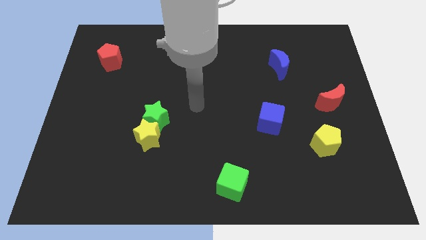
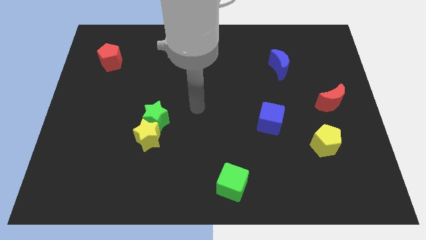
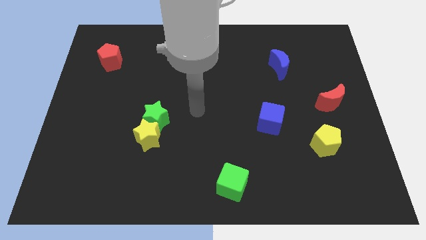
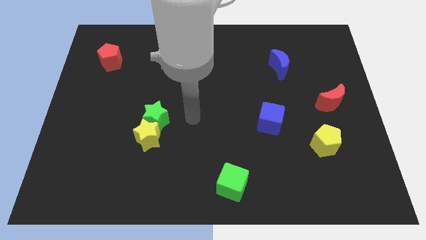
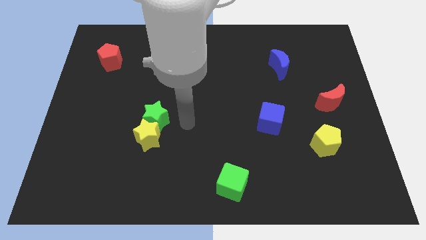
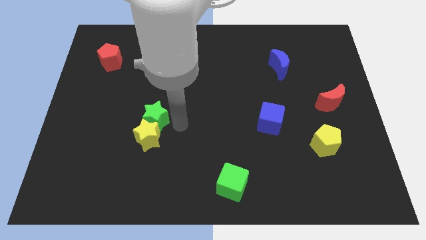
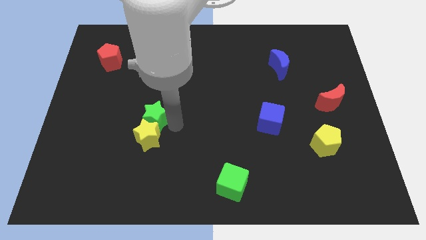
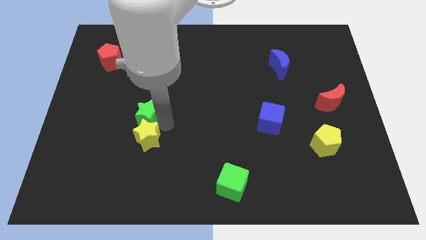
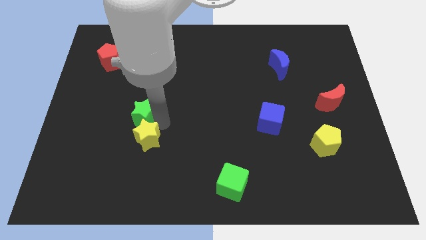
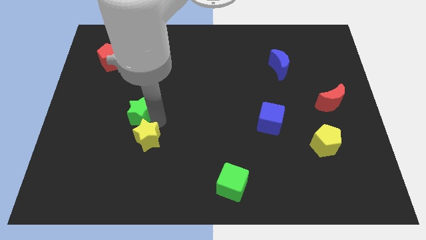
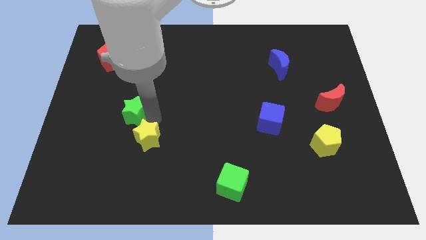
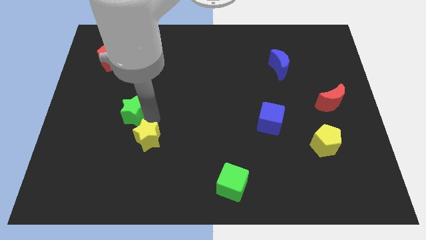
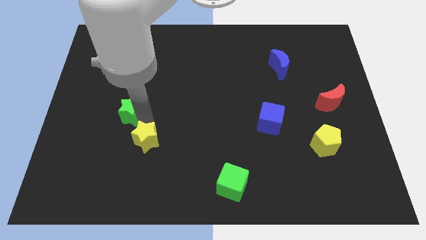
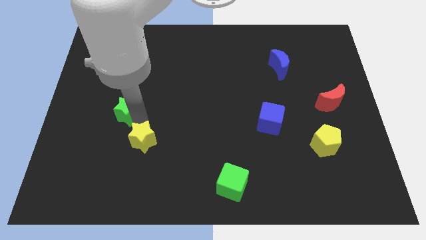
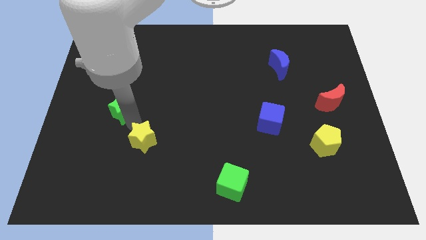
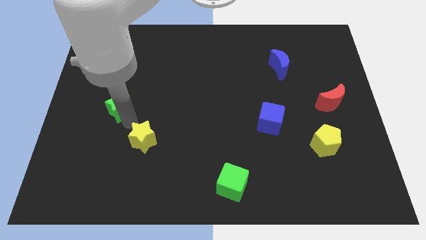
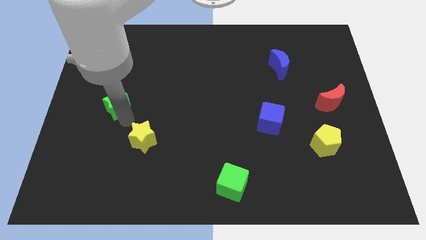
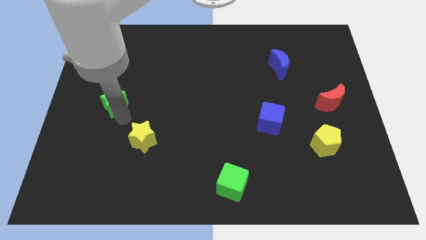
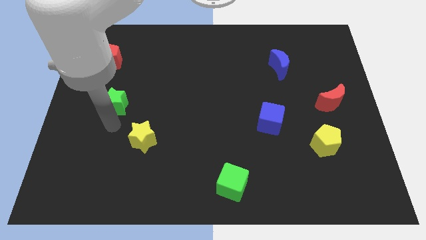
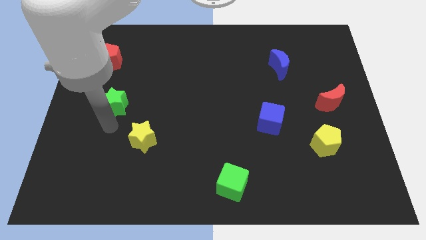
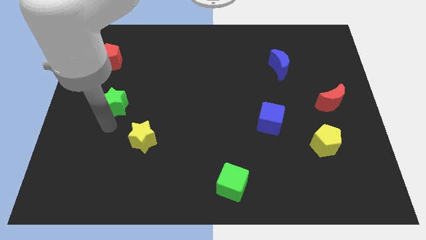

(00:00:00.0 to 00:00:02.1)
separate green star from yellow star

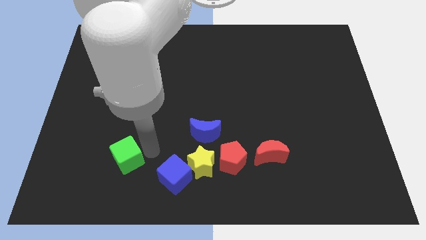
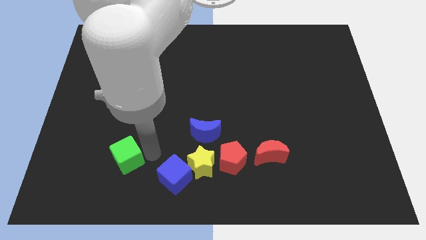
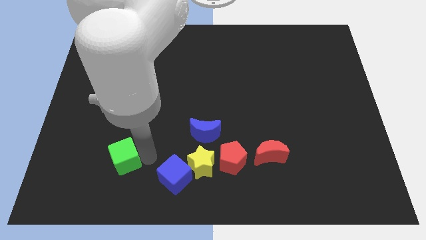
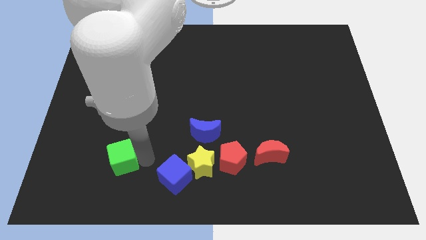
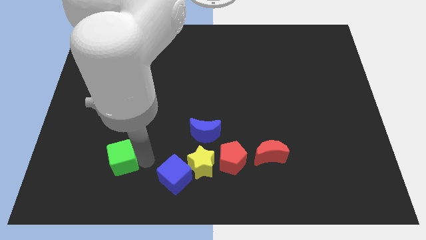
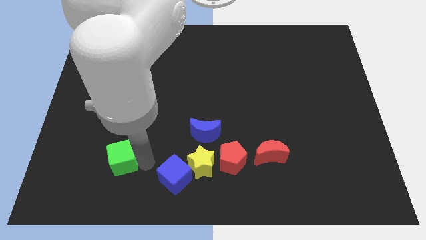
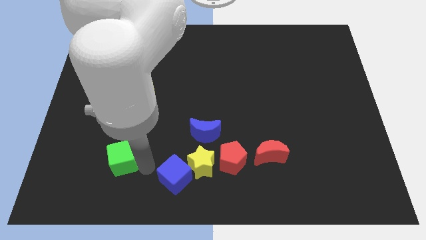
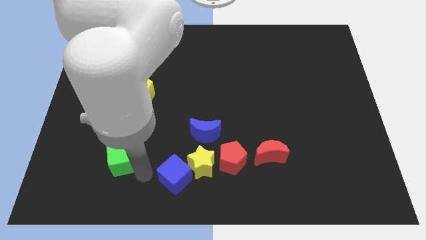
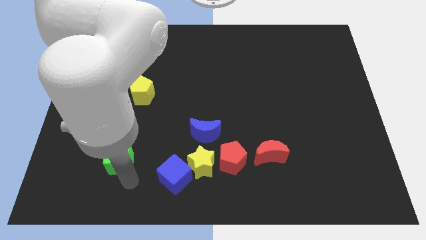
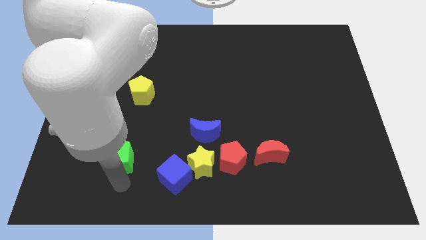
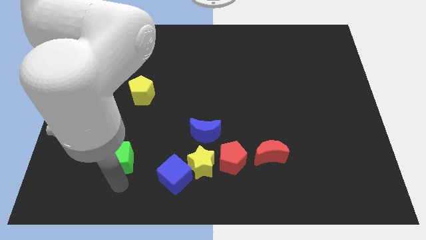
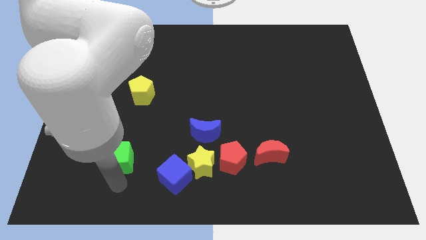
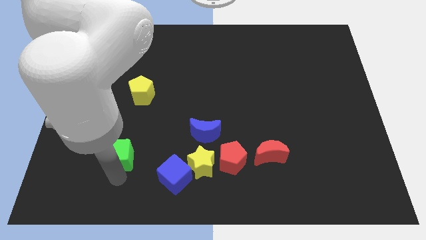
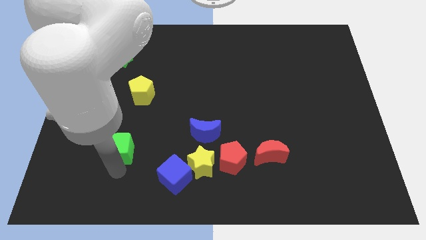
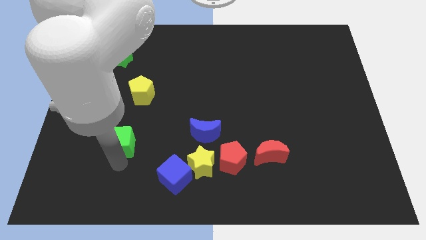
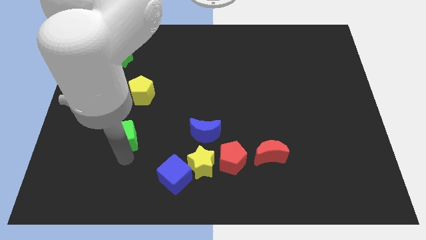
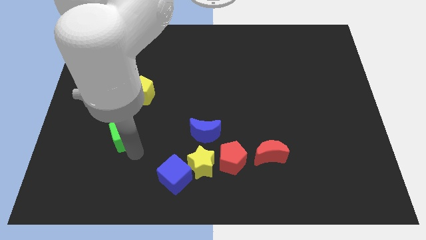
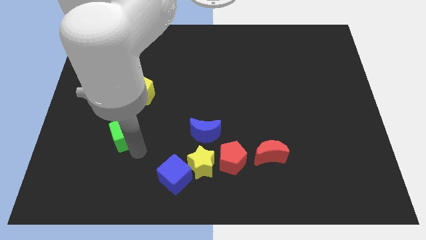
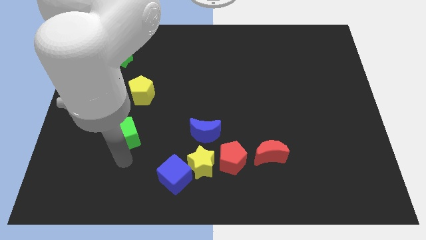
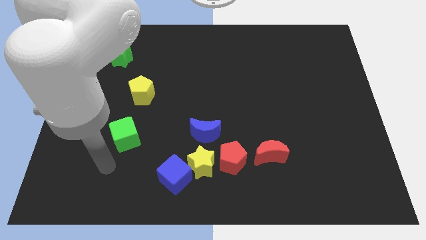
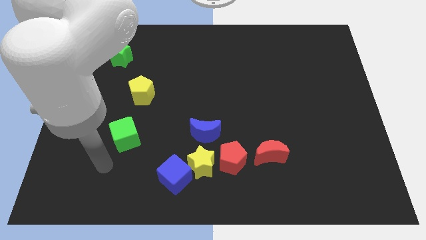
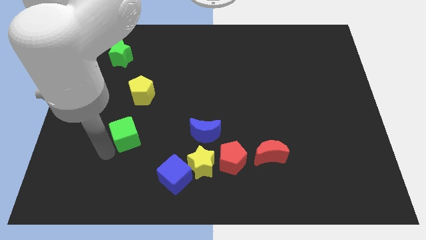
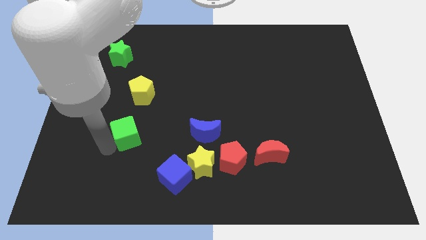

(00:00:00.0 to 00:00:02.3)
push the green cube below the yellow pentagon

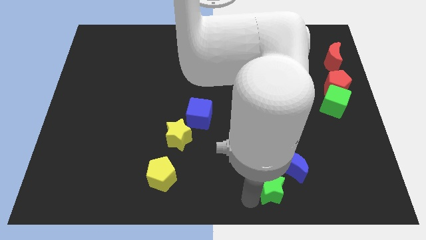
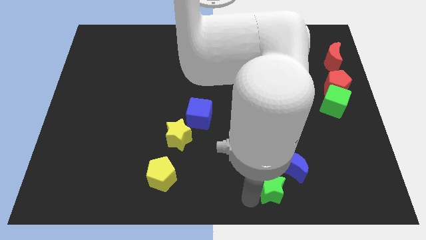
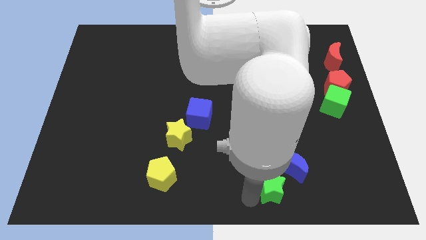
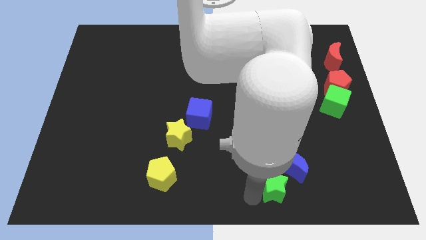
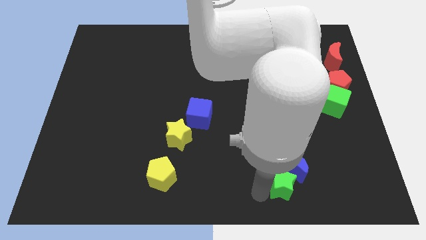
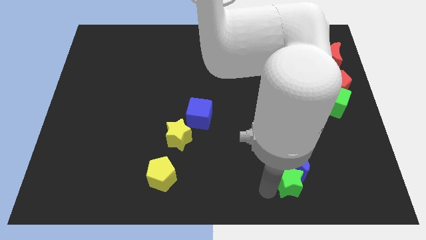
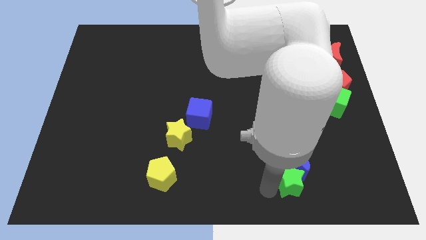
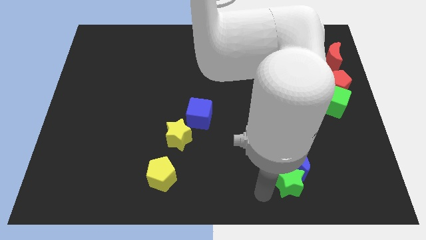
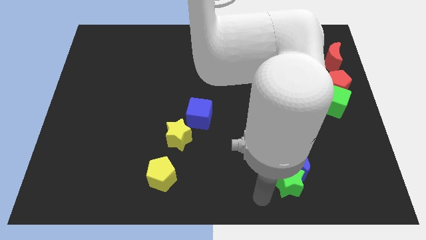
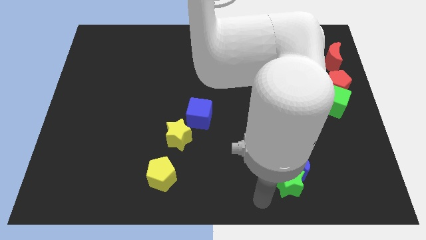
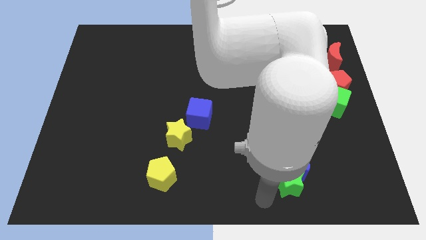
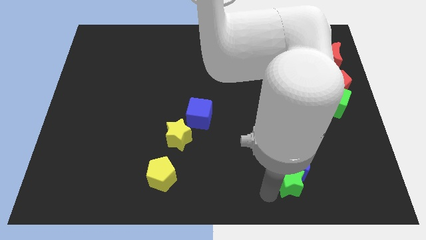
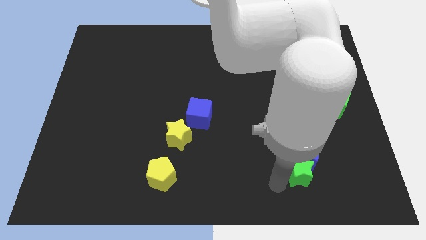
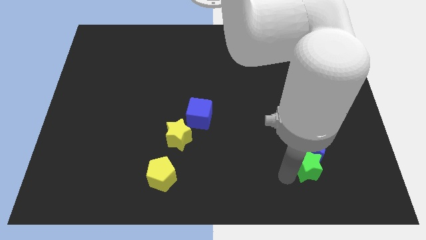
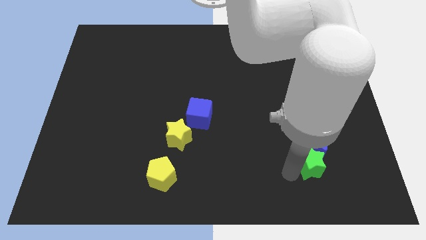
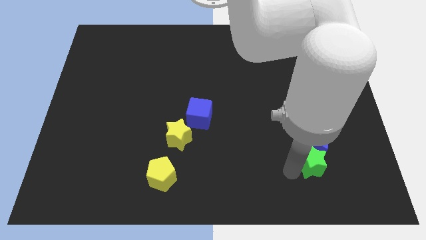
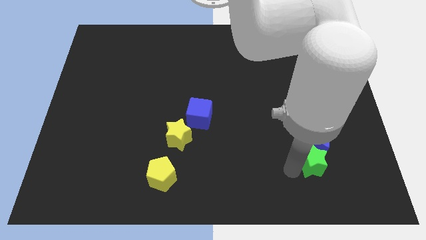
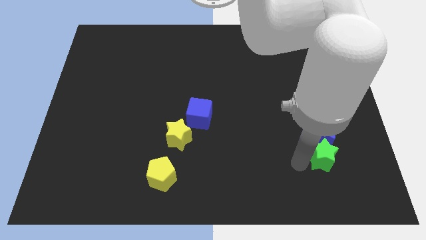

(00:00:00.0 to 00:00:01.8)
push the green star into the blue moon

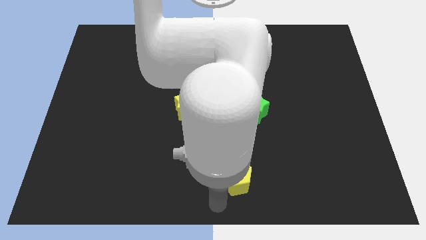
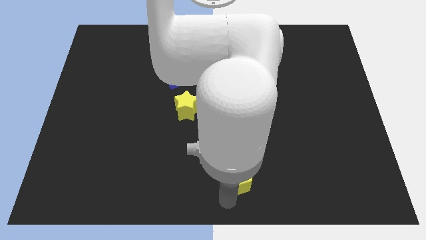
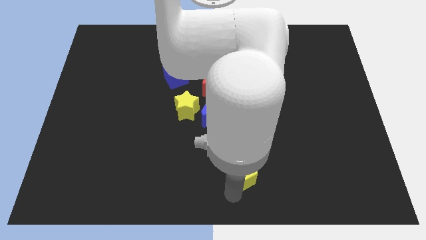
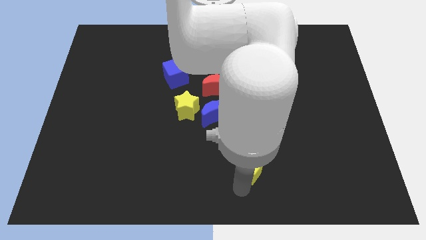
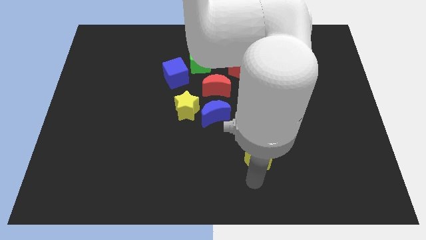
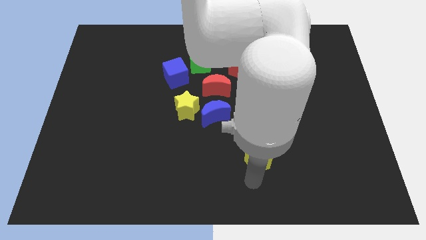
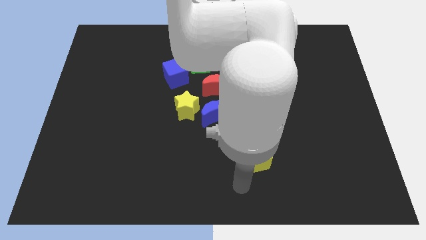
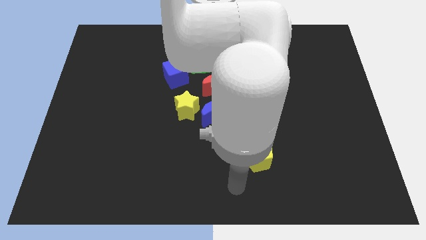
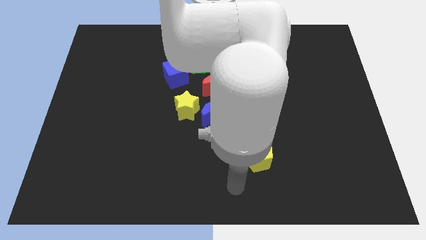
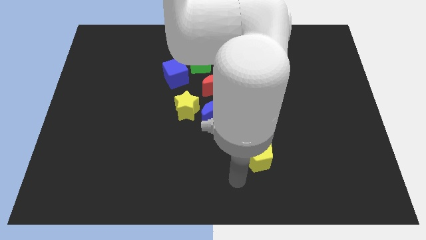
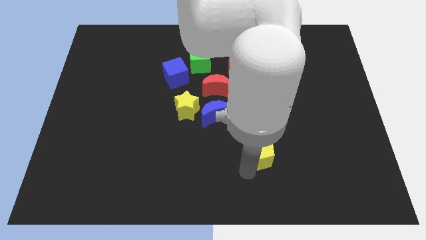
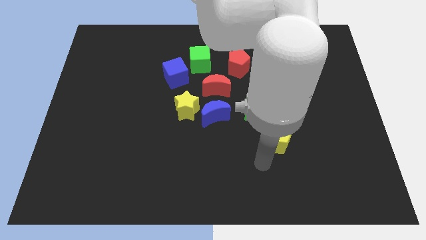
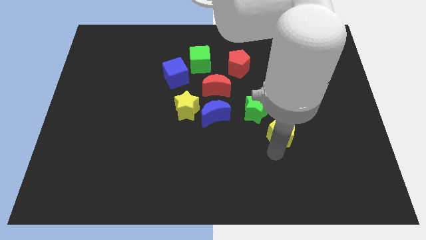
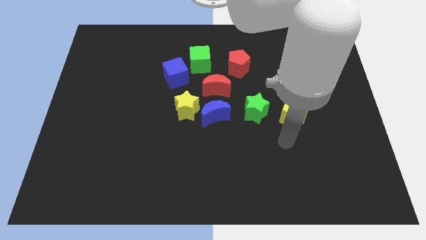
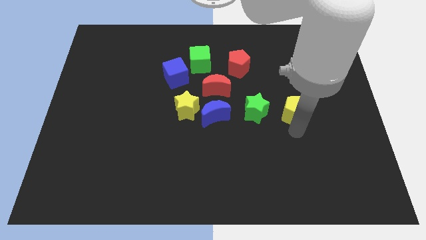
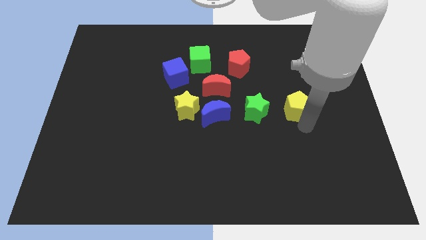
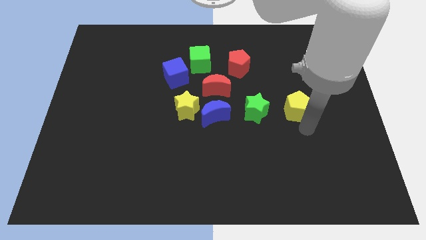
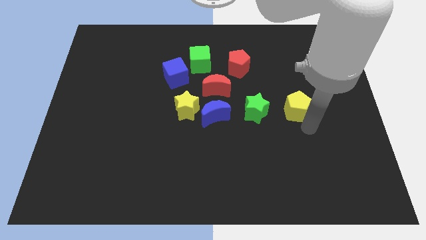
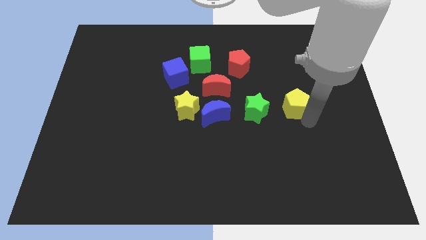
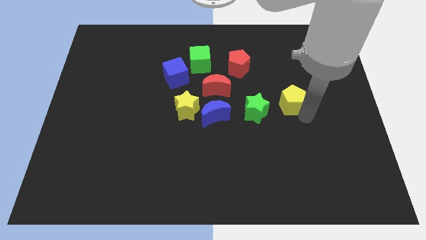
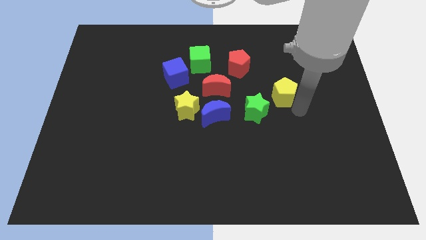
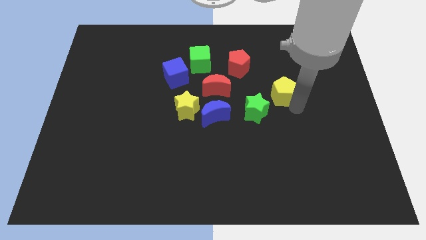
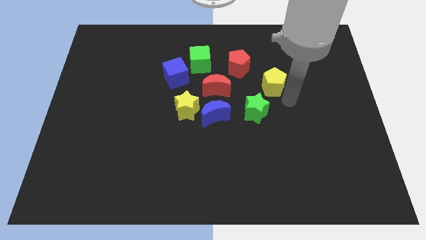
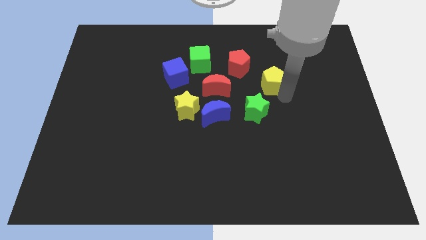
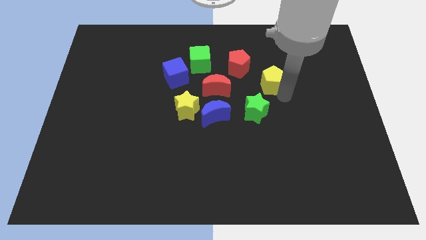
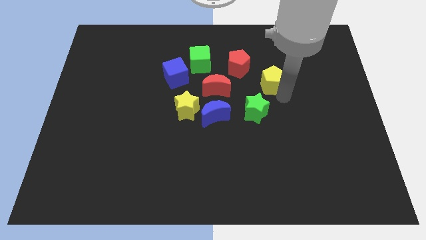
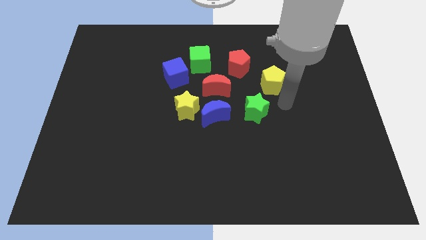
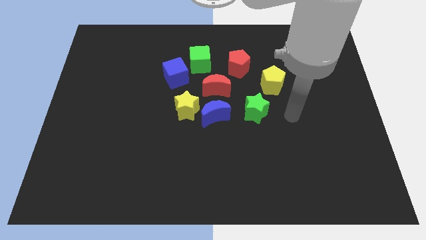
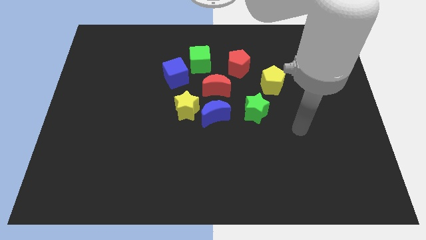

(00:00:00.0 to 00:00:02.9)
place the yellow pentagon to the right of the red moon
